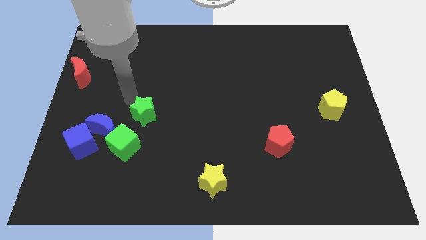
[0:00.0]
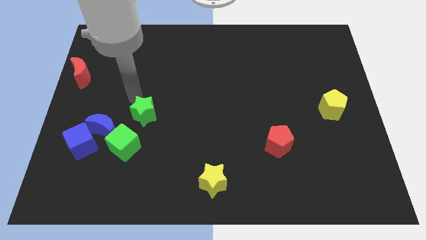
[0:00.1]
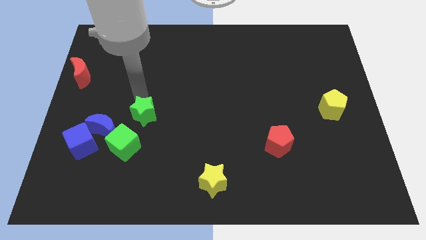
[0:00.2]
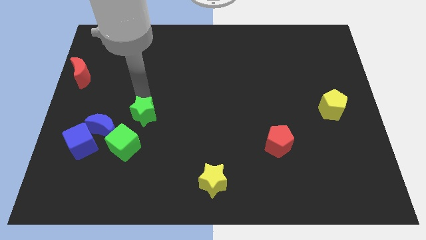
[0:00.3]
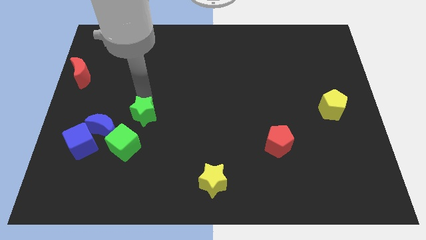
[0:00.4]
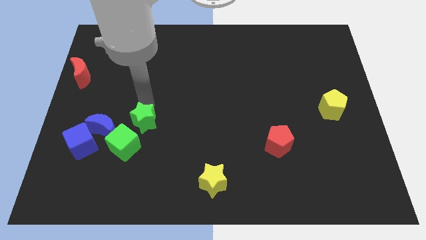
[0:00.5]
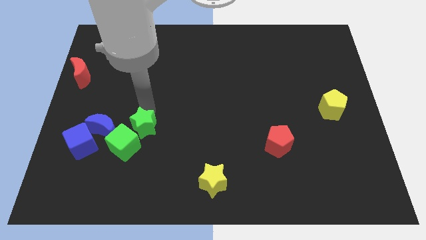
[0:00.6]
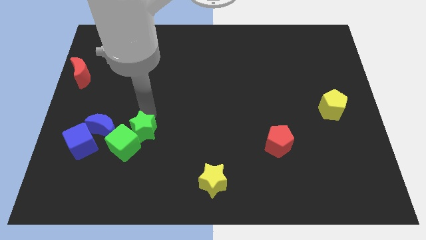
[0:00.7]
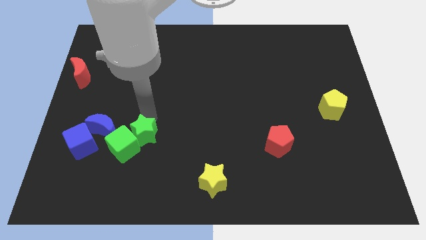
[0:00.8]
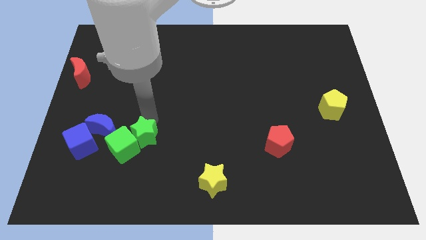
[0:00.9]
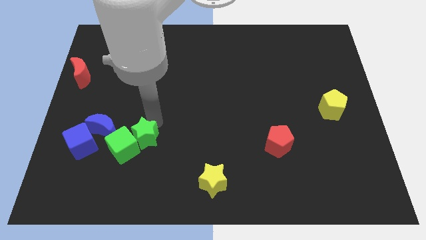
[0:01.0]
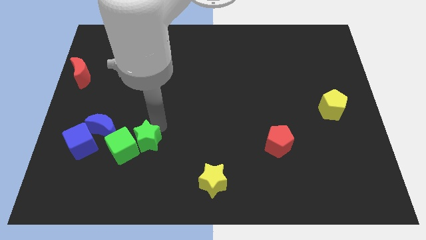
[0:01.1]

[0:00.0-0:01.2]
push the green star into the green cube towards the bottom left of the board

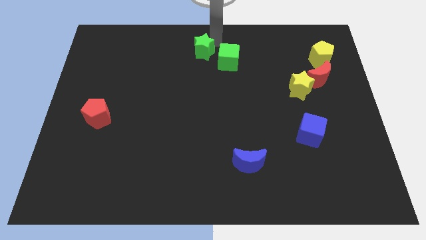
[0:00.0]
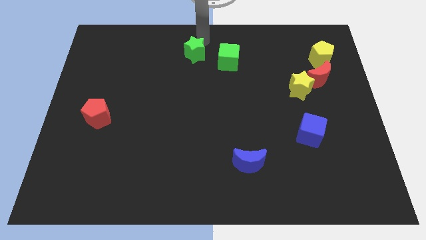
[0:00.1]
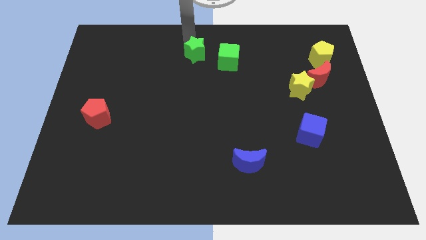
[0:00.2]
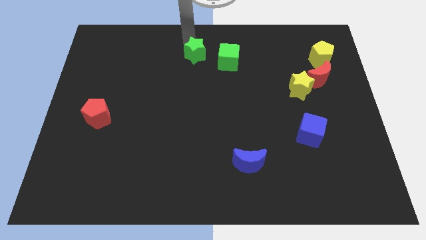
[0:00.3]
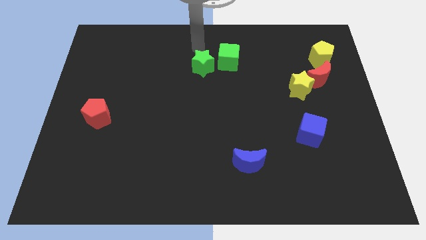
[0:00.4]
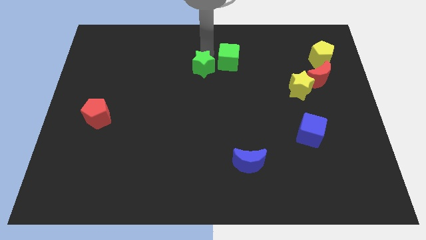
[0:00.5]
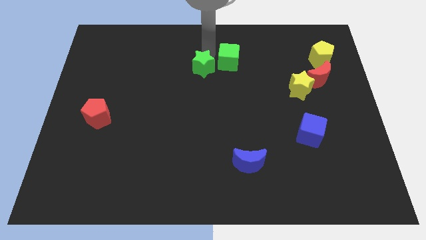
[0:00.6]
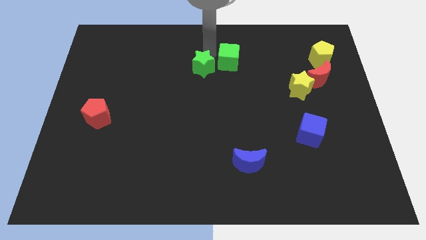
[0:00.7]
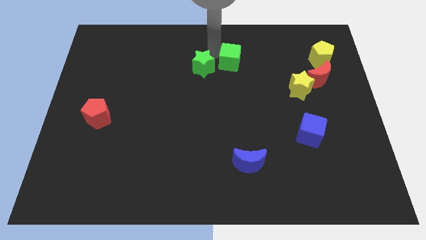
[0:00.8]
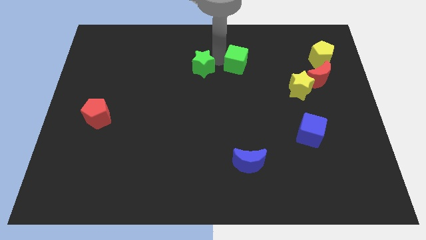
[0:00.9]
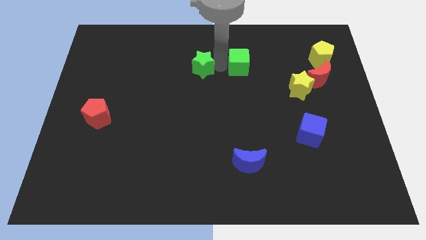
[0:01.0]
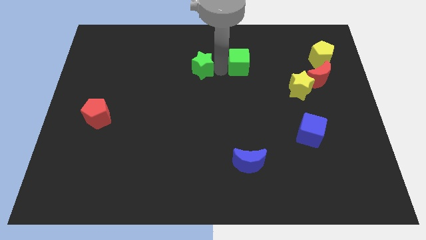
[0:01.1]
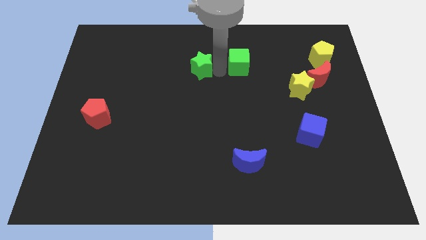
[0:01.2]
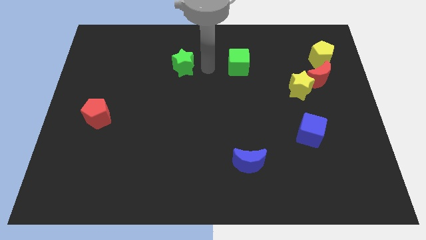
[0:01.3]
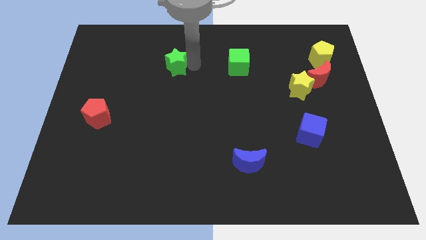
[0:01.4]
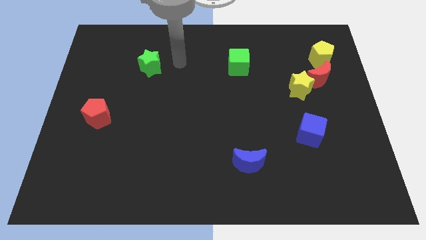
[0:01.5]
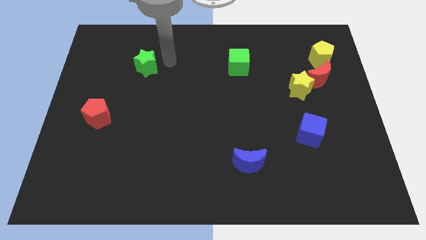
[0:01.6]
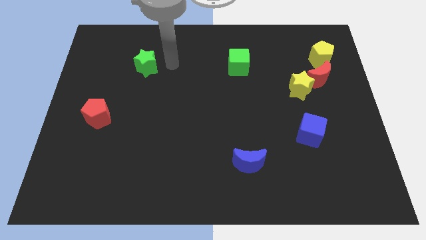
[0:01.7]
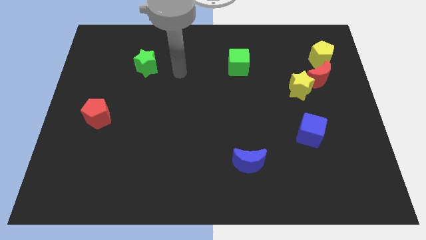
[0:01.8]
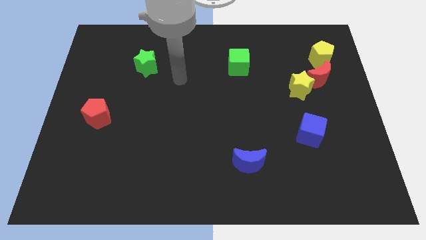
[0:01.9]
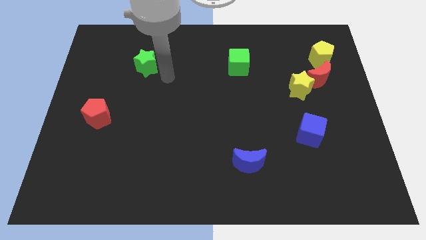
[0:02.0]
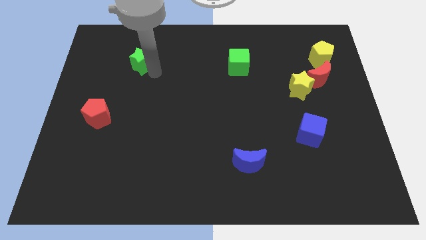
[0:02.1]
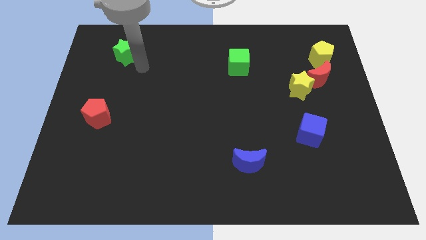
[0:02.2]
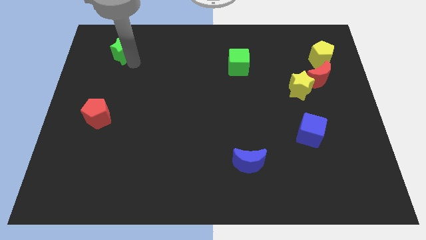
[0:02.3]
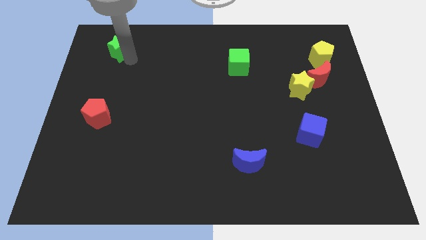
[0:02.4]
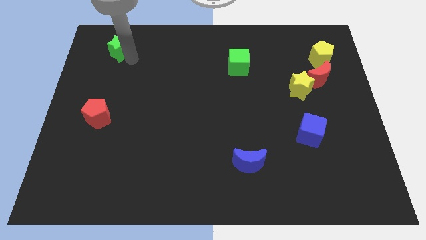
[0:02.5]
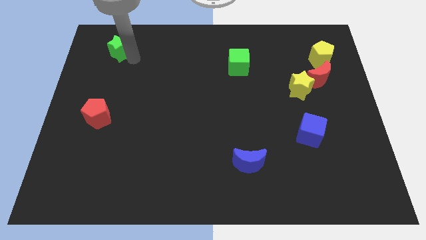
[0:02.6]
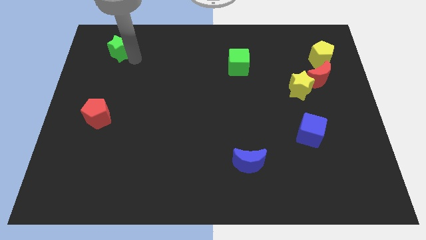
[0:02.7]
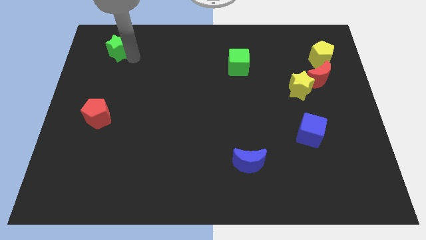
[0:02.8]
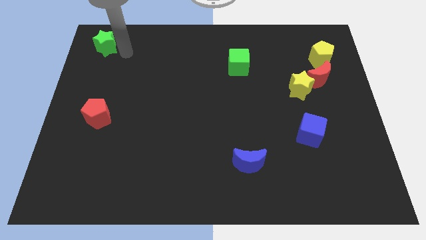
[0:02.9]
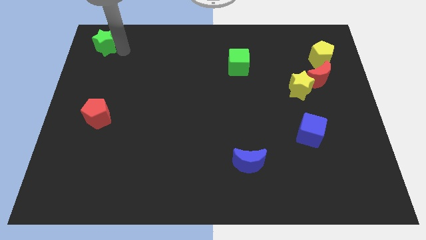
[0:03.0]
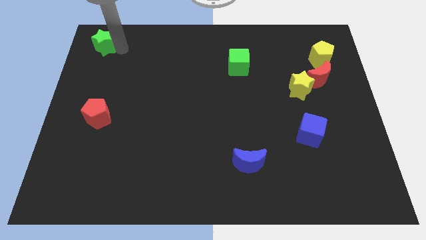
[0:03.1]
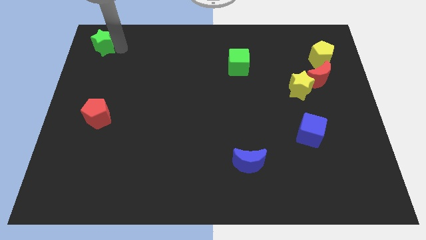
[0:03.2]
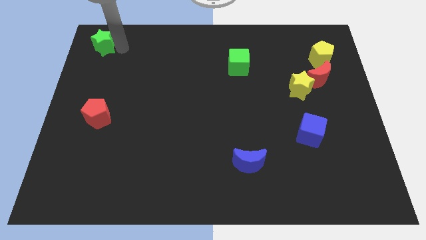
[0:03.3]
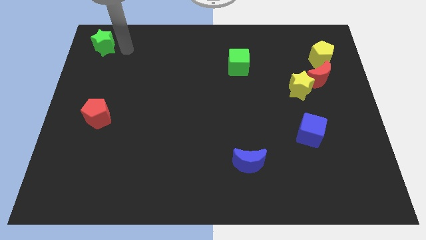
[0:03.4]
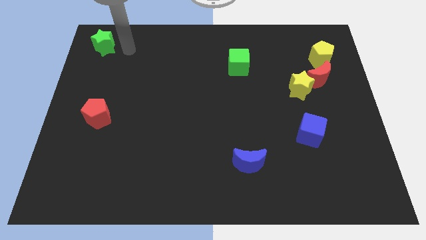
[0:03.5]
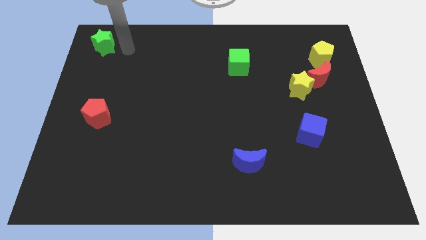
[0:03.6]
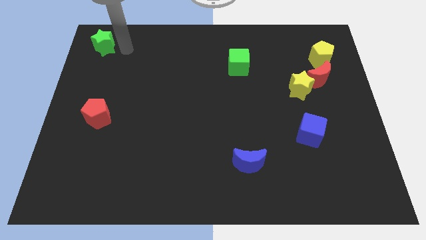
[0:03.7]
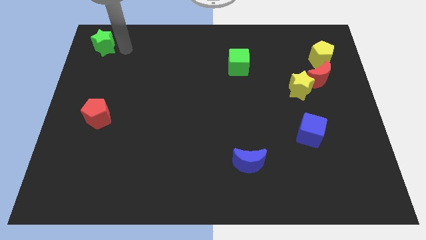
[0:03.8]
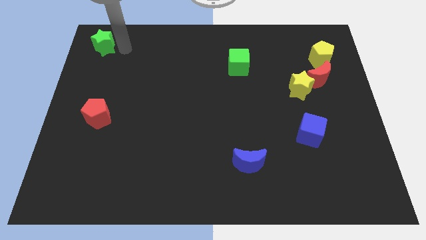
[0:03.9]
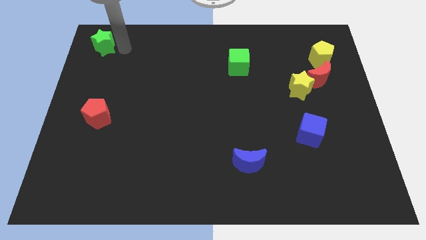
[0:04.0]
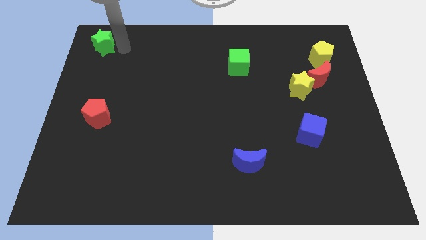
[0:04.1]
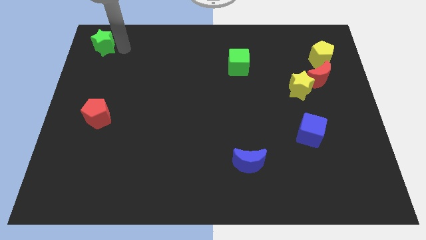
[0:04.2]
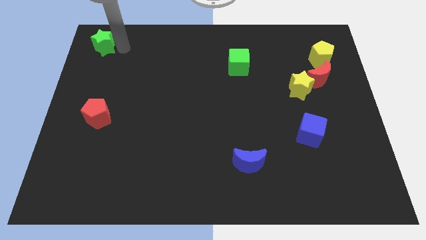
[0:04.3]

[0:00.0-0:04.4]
place the green star above the red pentagon

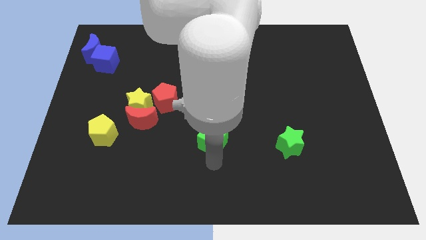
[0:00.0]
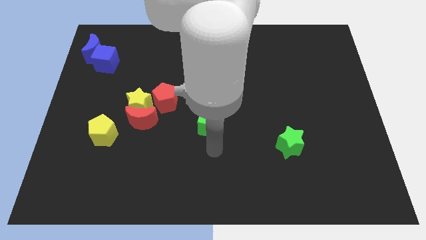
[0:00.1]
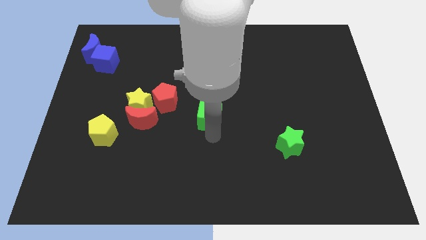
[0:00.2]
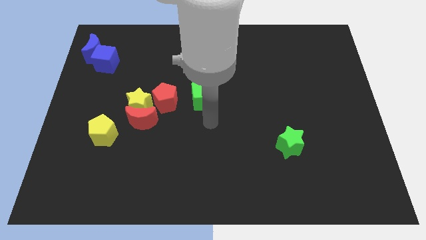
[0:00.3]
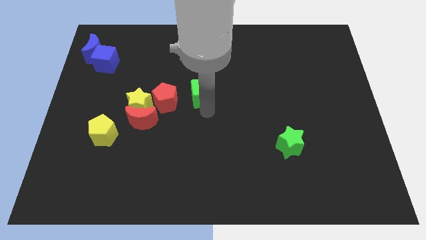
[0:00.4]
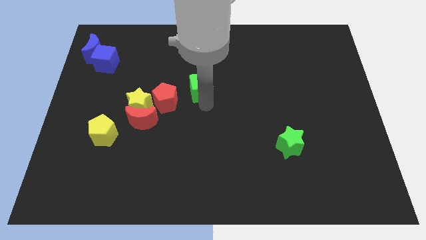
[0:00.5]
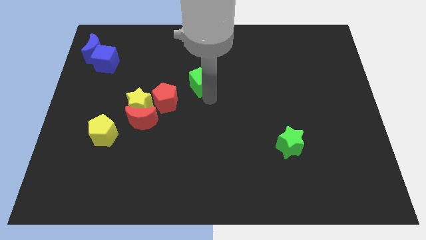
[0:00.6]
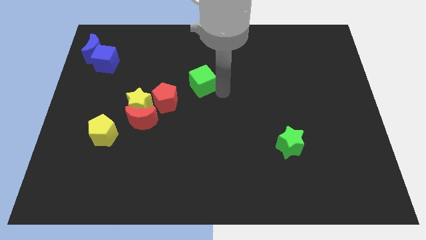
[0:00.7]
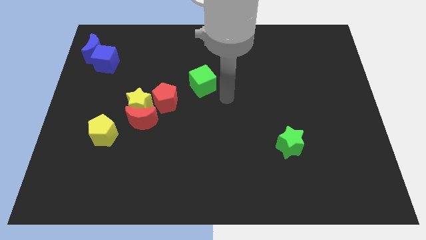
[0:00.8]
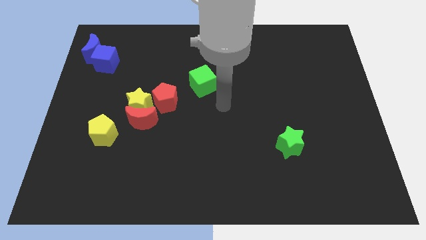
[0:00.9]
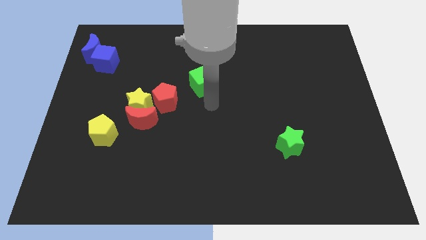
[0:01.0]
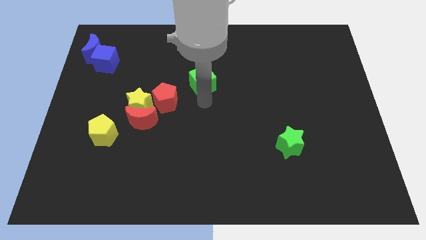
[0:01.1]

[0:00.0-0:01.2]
place the green cube to the right of the red pentagon

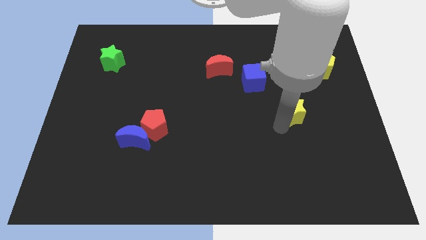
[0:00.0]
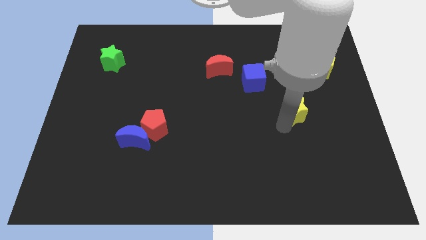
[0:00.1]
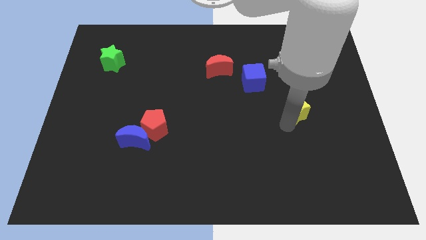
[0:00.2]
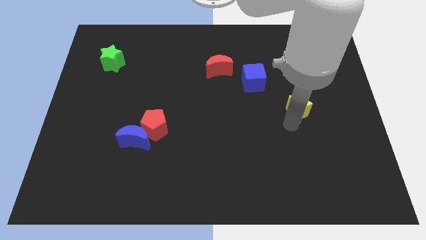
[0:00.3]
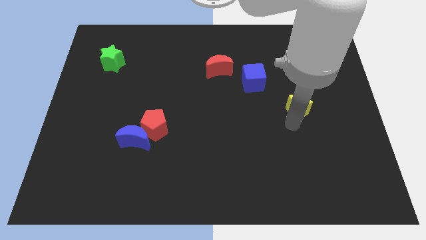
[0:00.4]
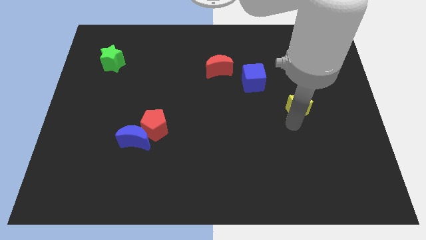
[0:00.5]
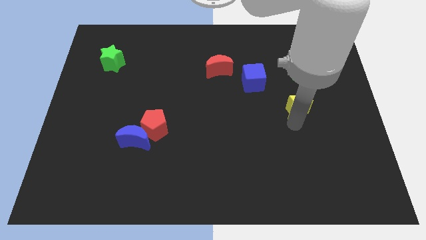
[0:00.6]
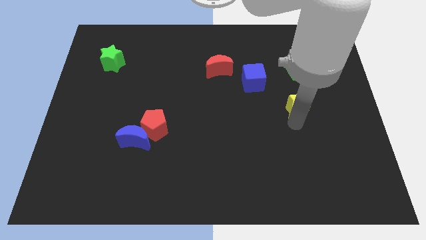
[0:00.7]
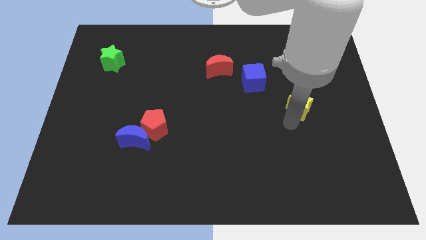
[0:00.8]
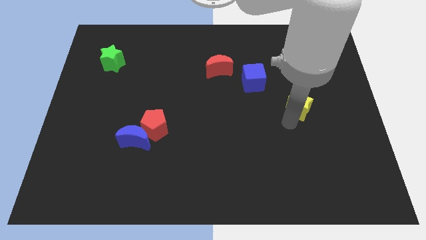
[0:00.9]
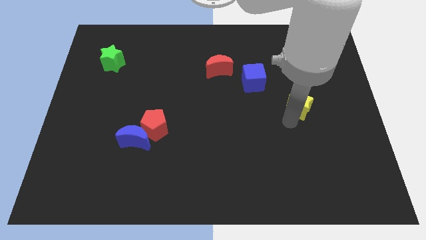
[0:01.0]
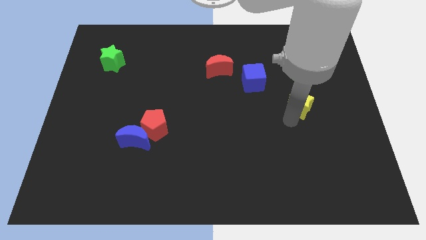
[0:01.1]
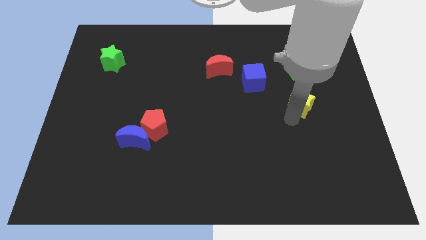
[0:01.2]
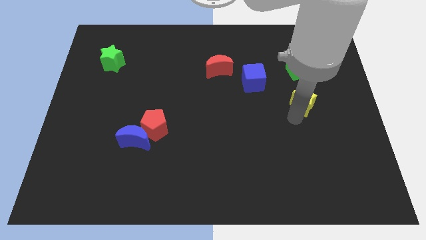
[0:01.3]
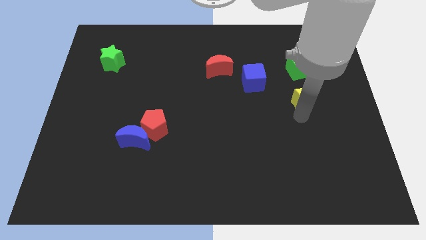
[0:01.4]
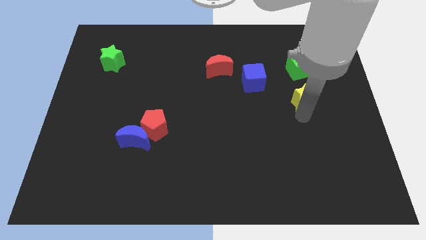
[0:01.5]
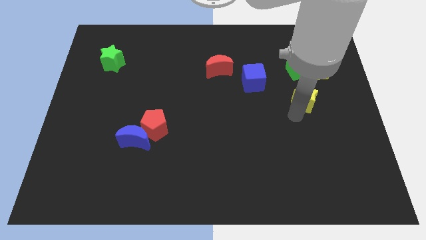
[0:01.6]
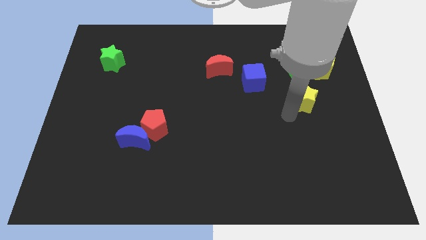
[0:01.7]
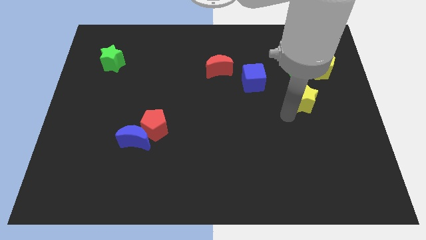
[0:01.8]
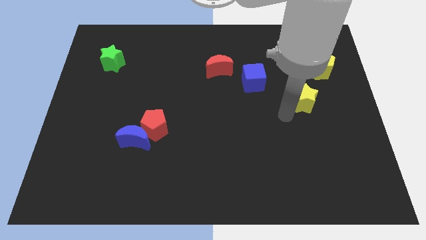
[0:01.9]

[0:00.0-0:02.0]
put the yellow star vertically below the green cube

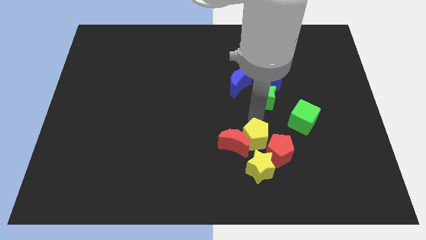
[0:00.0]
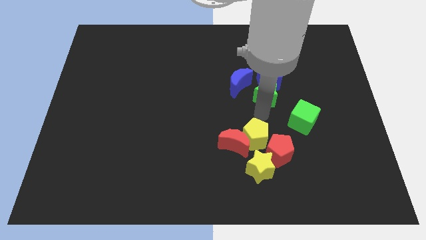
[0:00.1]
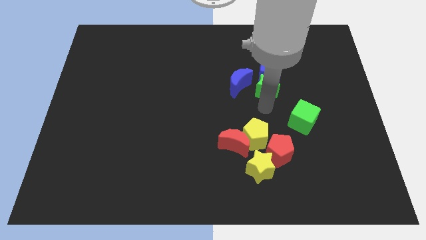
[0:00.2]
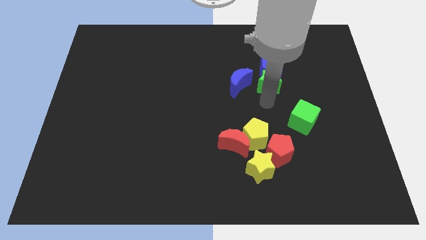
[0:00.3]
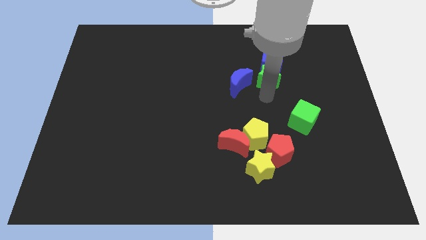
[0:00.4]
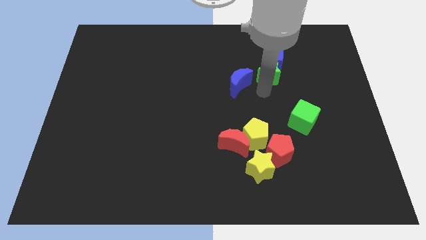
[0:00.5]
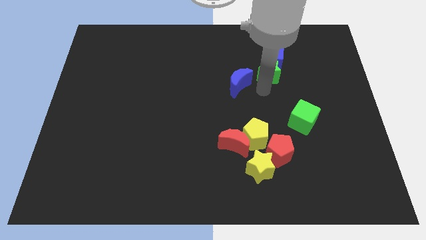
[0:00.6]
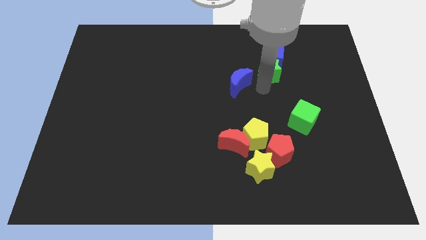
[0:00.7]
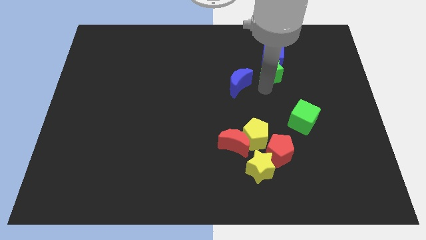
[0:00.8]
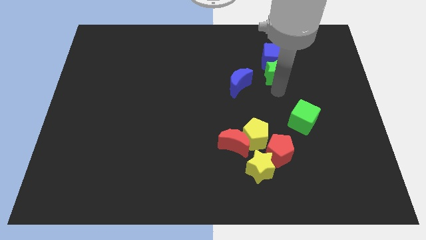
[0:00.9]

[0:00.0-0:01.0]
push the green star into the blue cube
